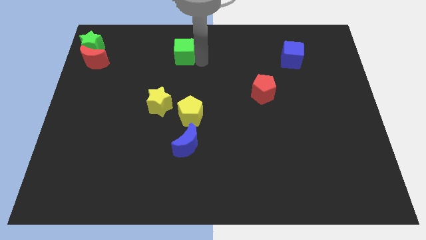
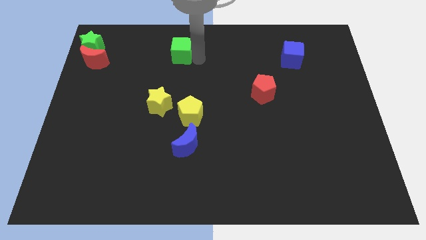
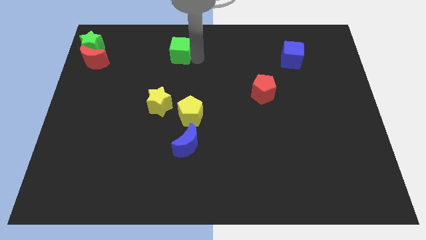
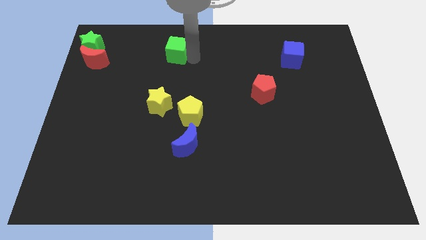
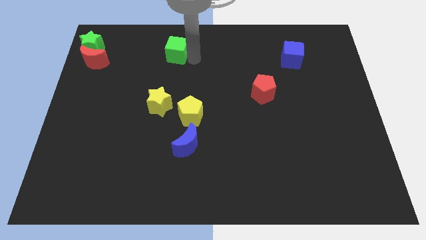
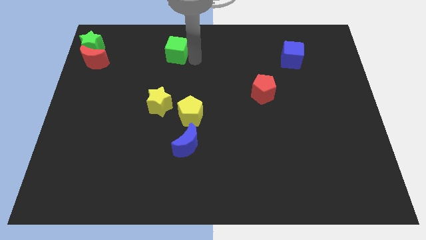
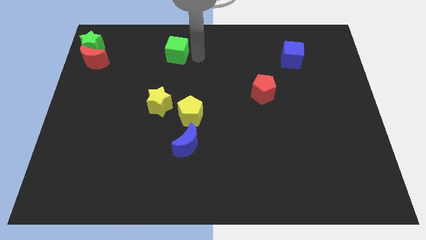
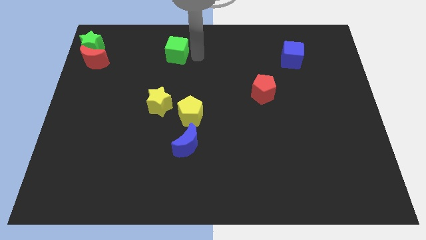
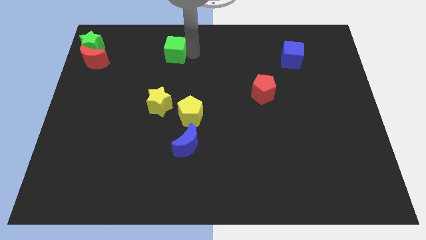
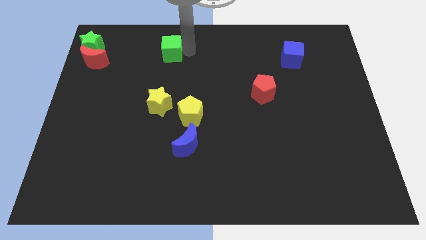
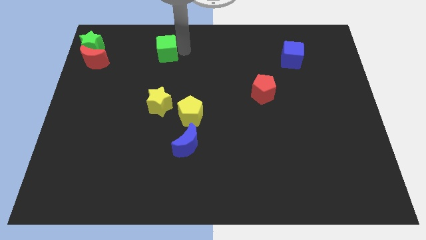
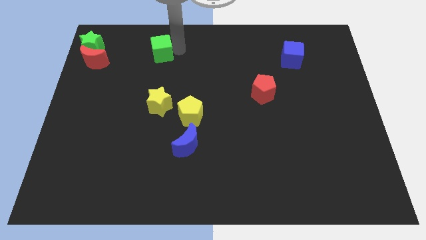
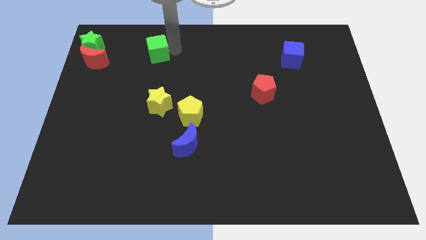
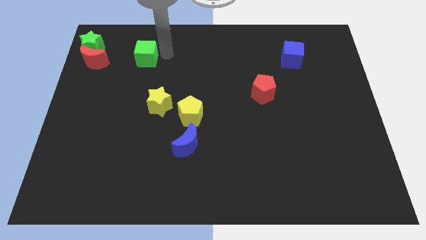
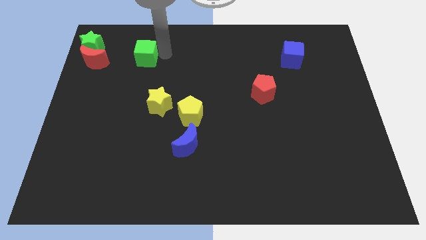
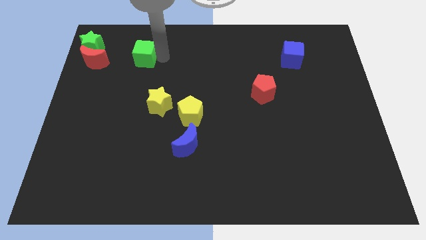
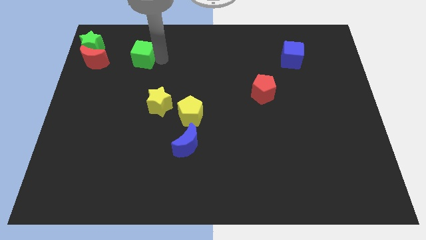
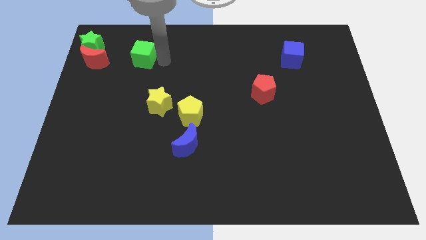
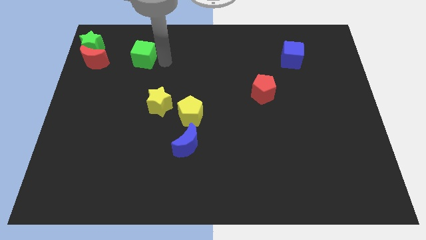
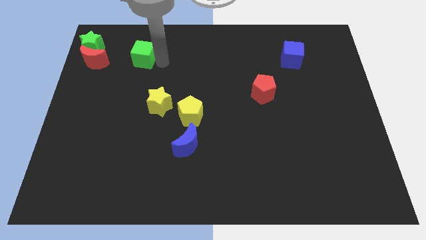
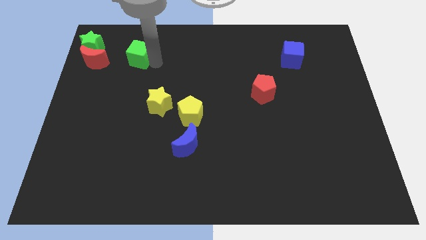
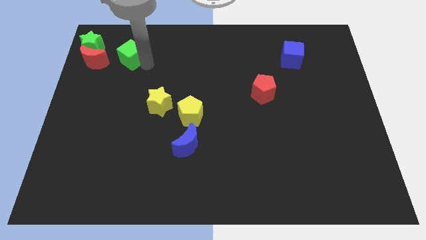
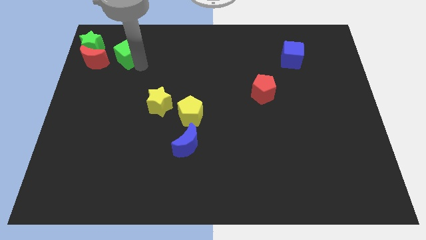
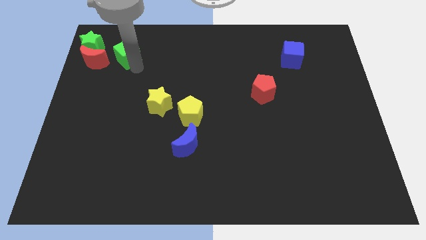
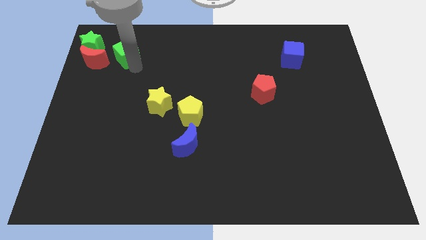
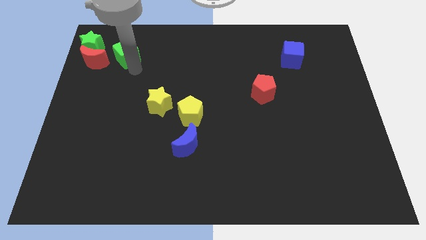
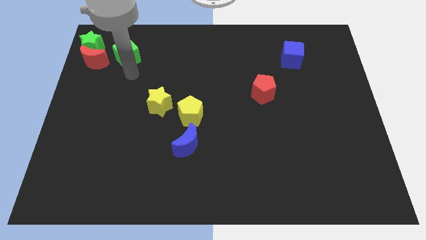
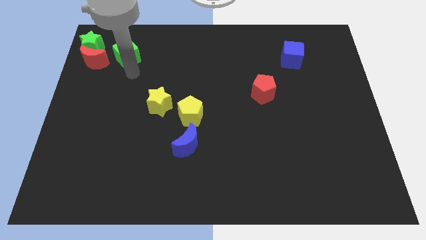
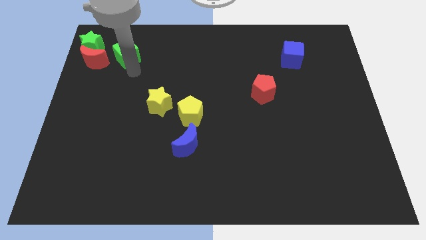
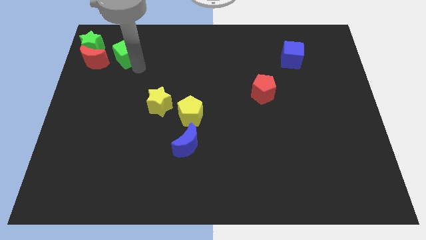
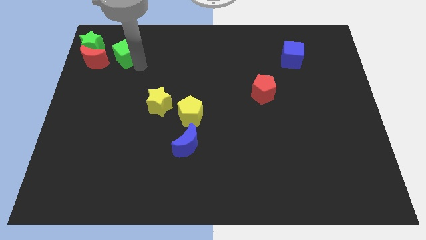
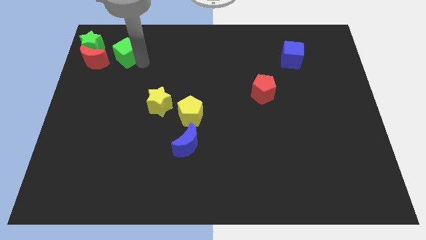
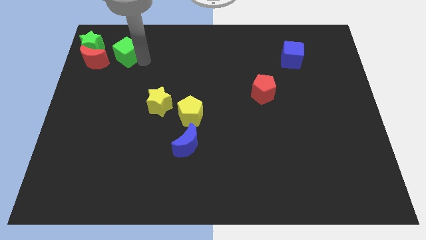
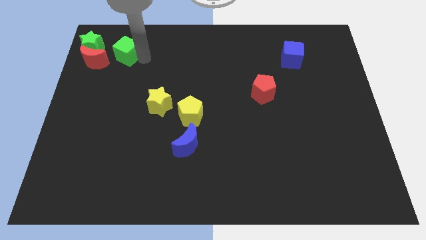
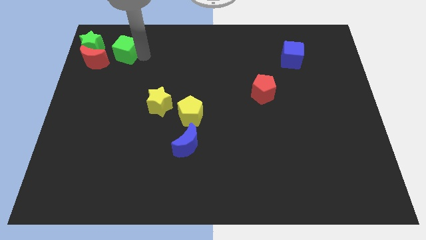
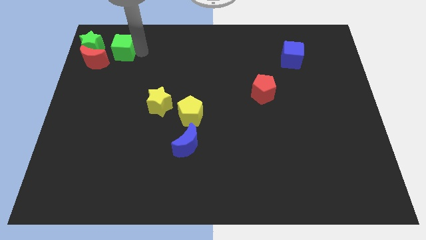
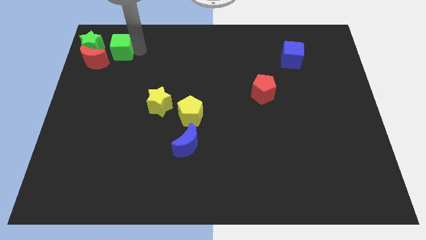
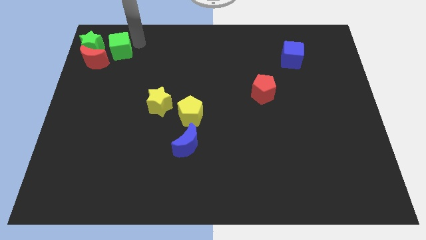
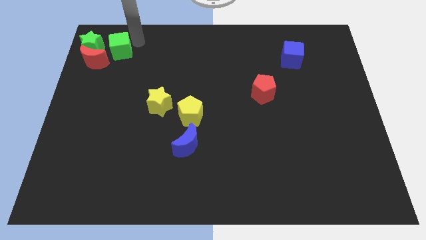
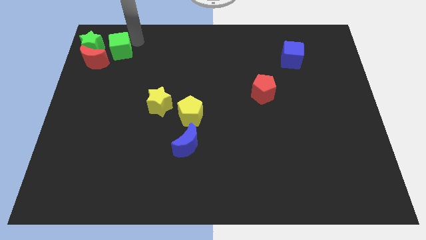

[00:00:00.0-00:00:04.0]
move the green cube towards the top left corner

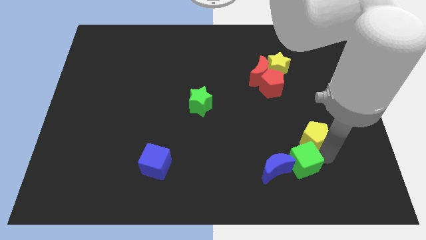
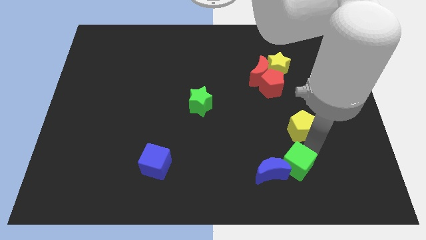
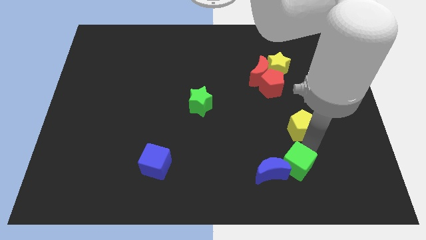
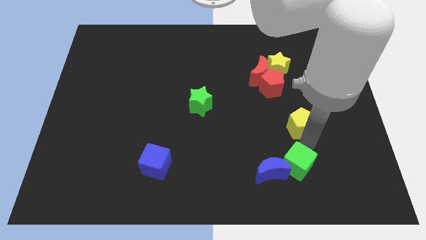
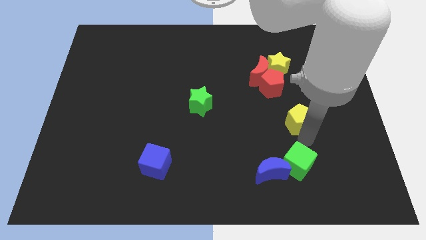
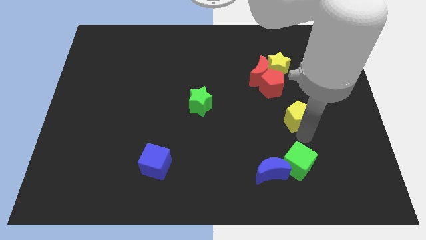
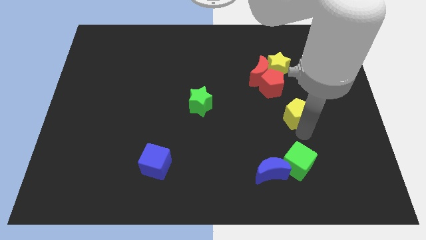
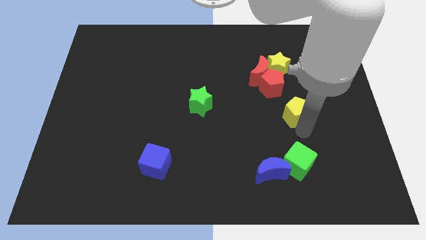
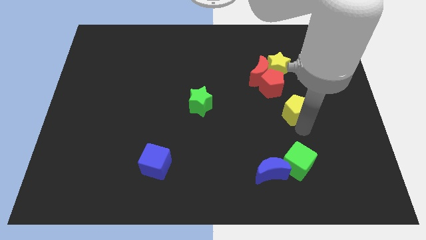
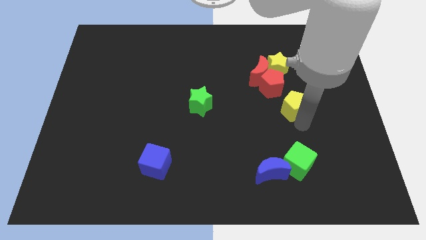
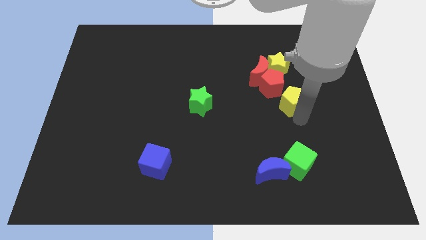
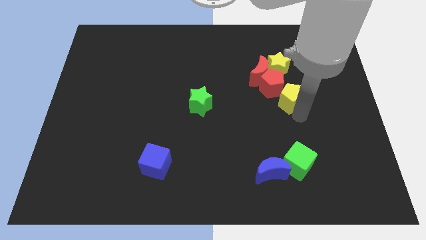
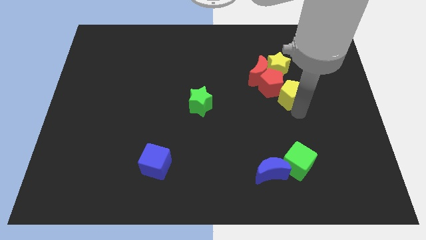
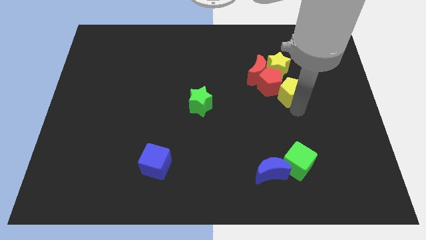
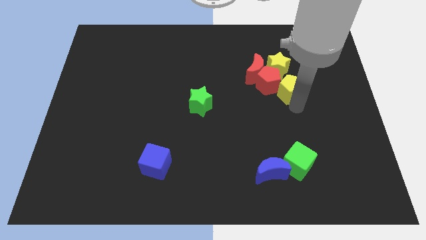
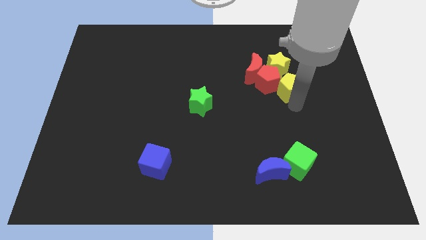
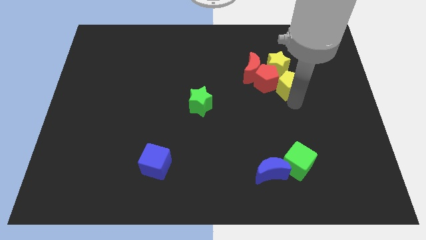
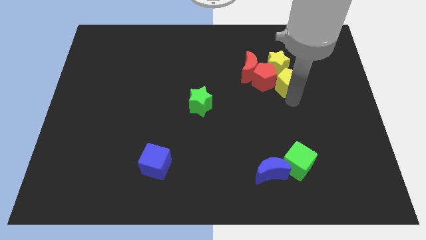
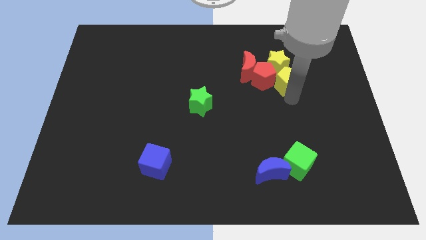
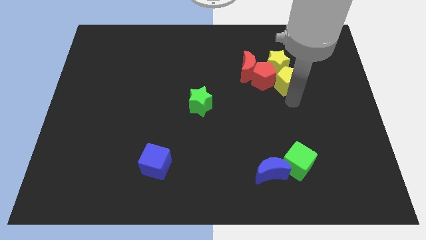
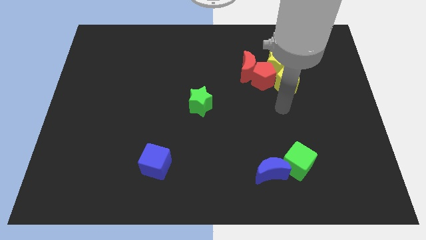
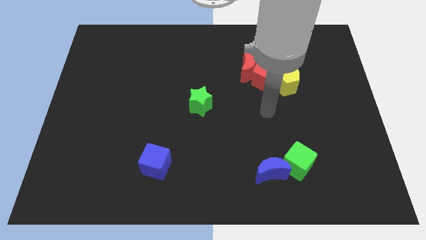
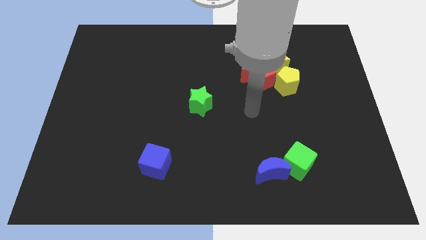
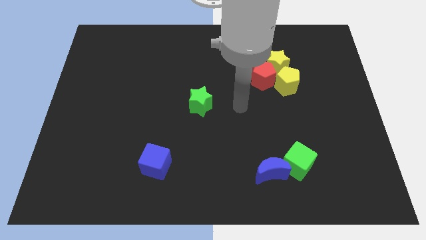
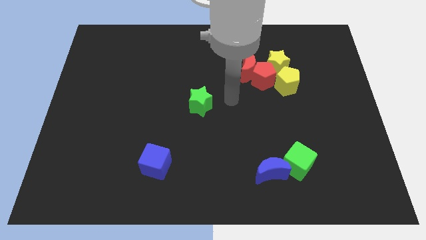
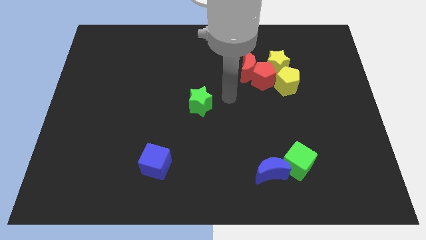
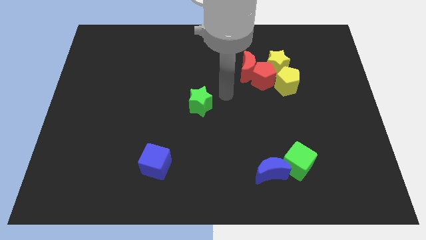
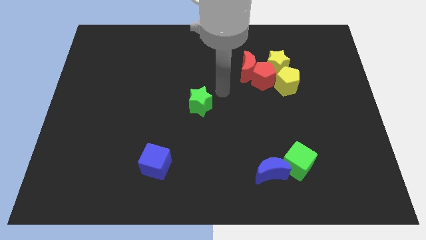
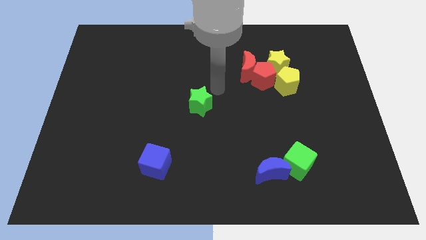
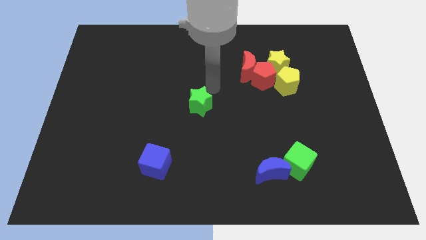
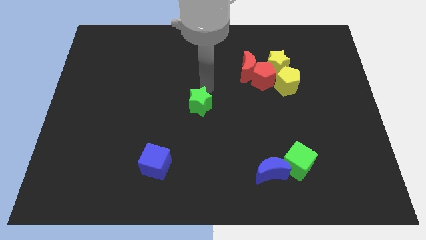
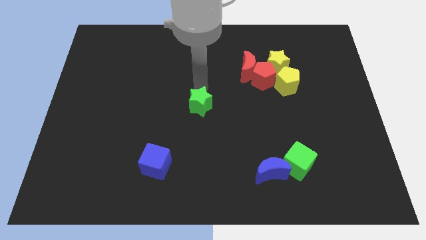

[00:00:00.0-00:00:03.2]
place the arm above the green star

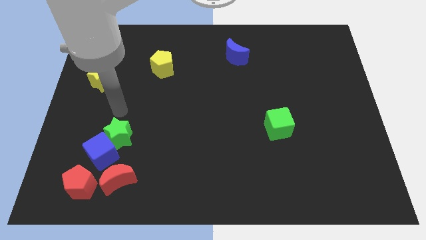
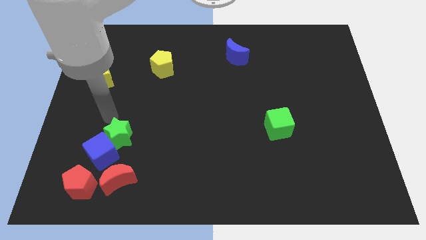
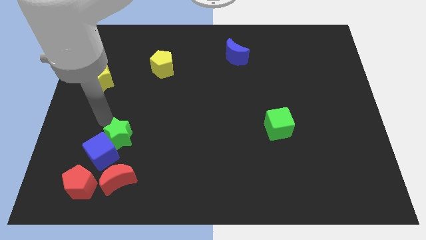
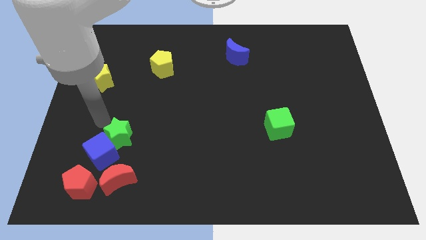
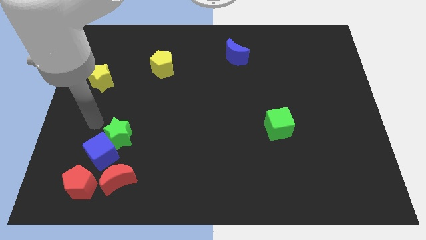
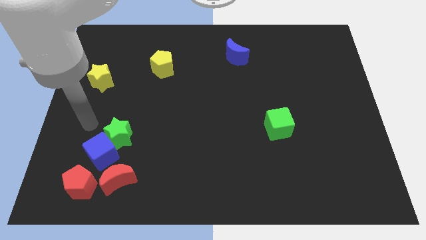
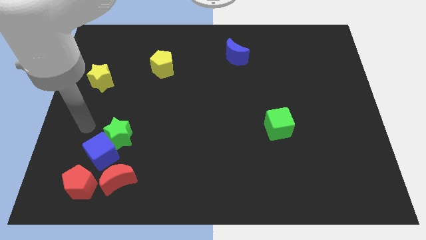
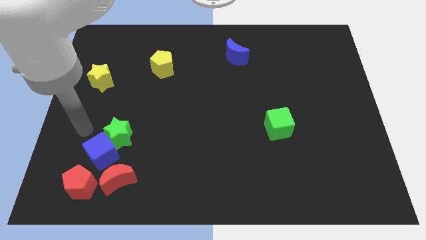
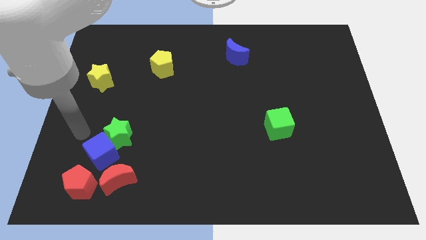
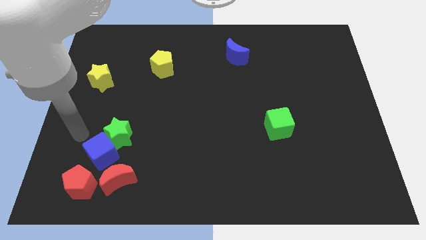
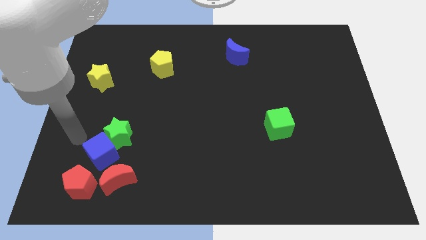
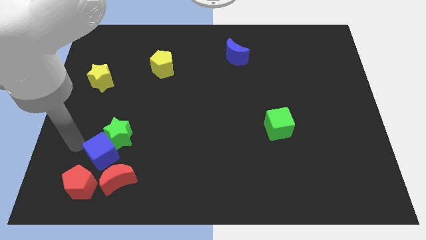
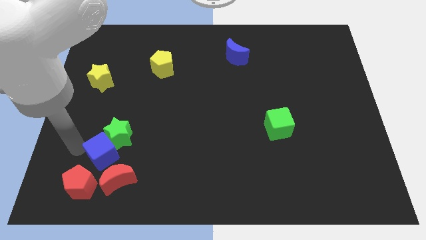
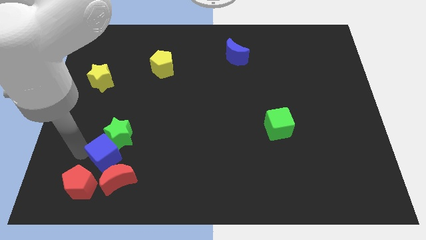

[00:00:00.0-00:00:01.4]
place your arm at the left of the blue cube

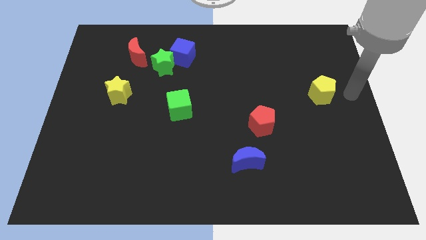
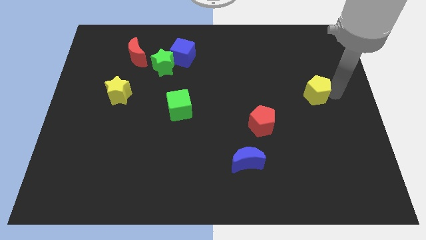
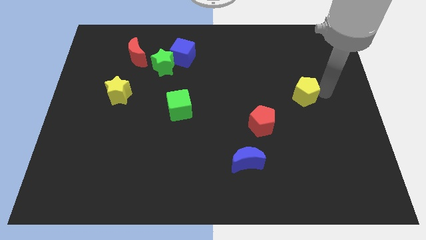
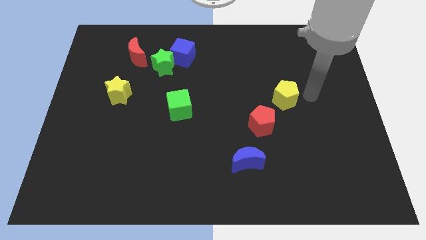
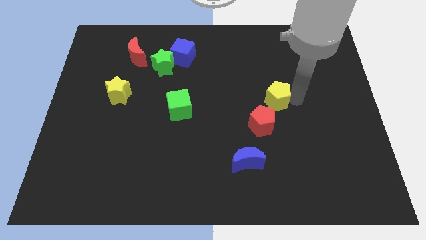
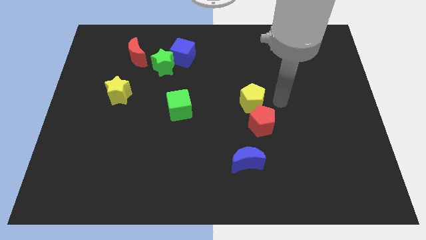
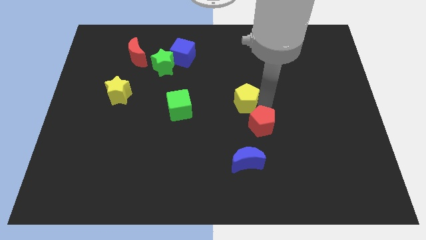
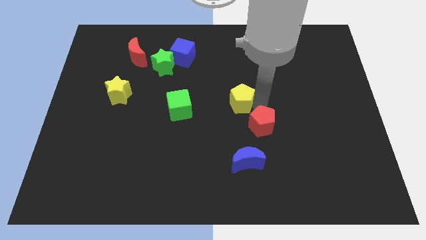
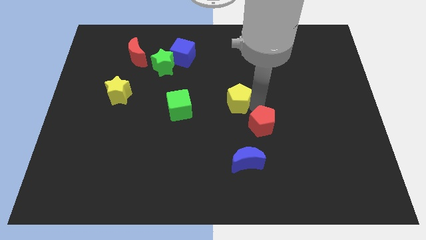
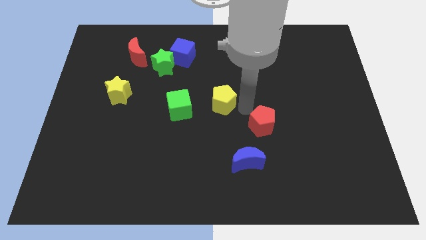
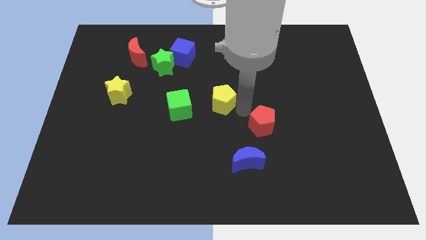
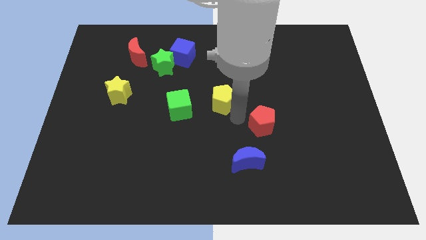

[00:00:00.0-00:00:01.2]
move yellow pentagon at center
